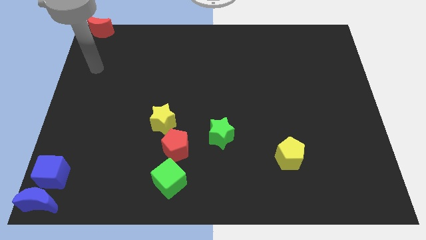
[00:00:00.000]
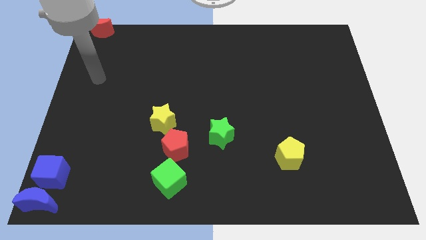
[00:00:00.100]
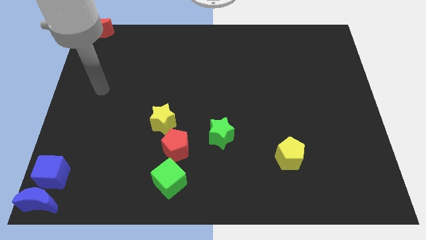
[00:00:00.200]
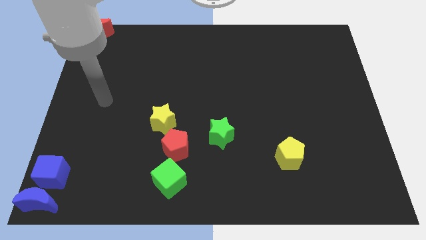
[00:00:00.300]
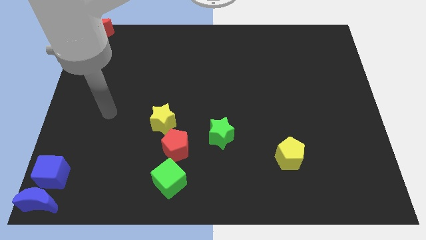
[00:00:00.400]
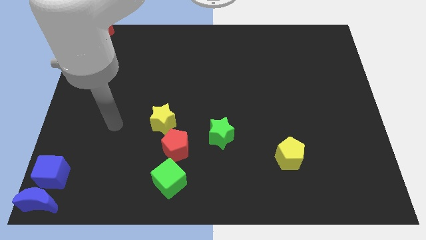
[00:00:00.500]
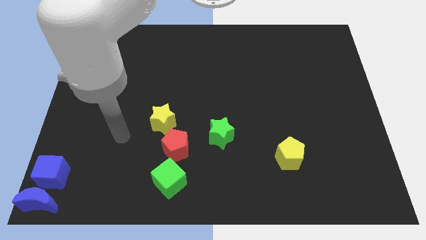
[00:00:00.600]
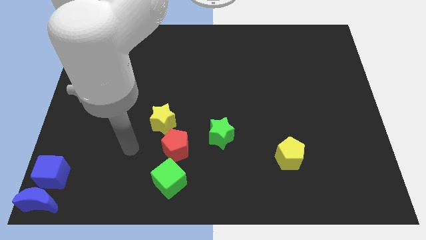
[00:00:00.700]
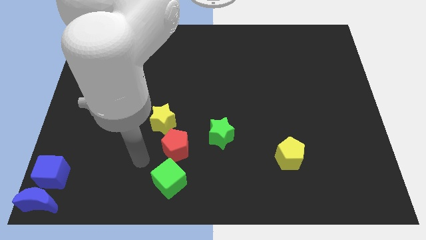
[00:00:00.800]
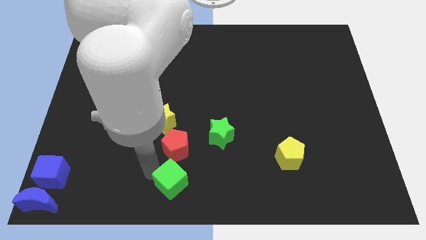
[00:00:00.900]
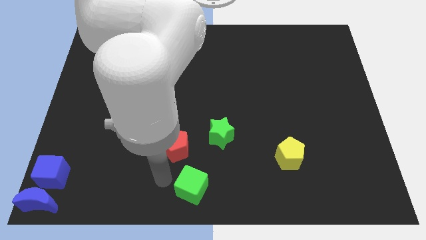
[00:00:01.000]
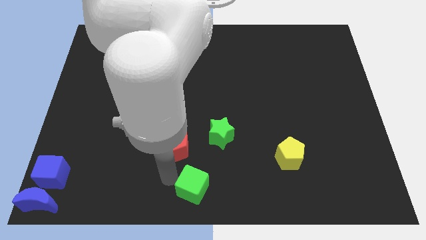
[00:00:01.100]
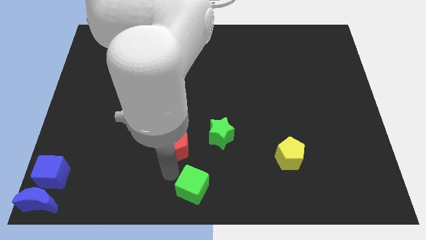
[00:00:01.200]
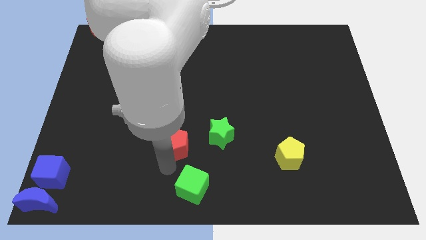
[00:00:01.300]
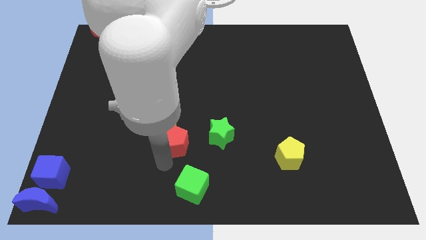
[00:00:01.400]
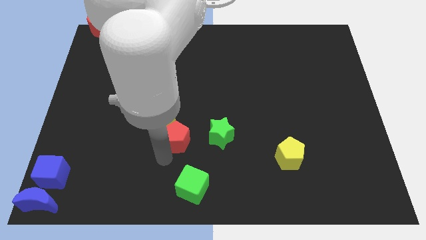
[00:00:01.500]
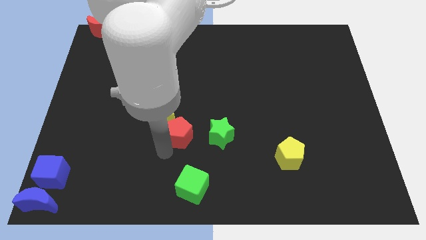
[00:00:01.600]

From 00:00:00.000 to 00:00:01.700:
move the green cube diagonally bottom right to the red pentagon

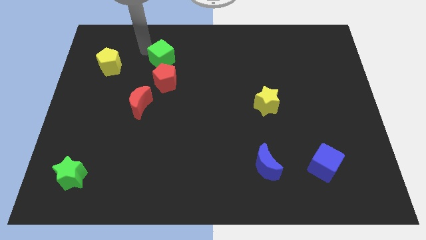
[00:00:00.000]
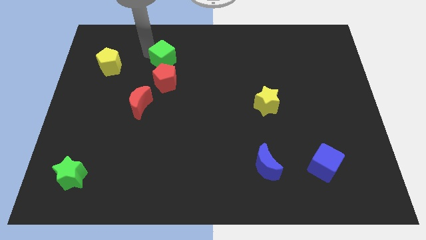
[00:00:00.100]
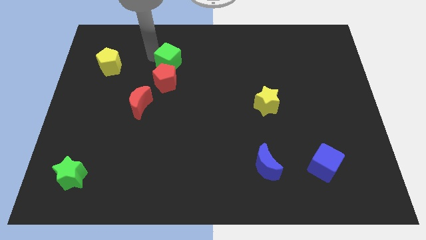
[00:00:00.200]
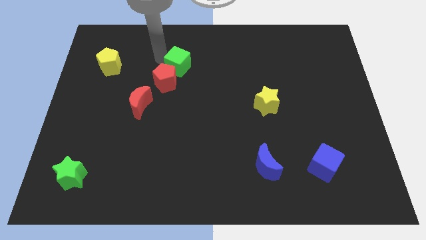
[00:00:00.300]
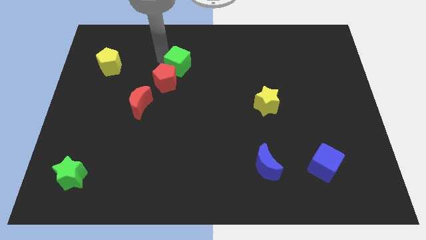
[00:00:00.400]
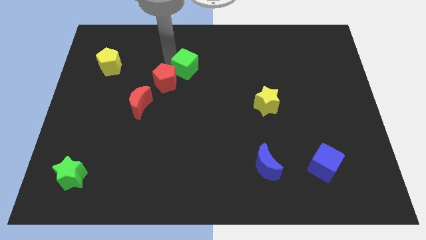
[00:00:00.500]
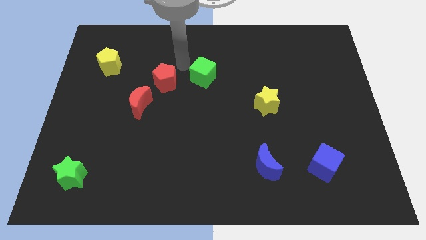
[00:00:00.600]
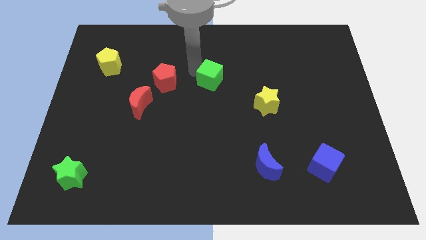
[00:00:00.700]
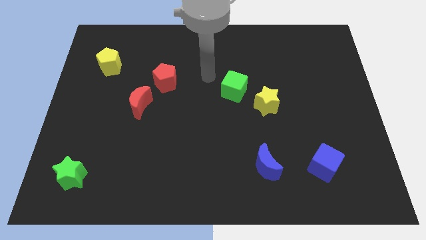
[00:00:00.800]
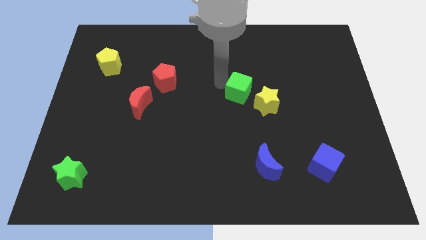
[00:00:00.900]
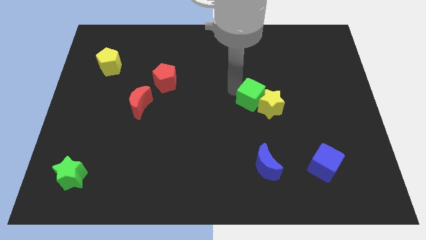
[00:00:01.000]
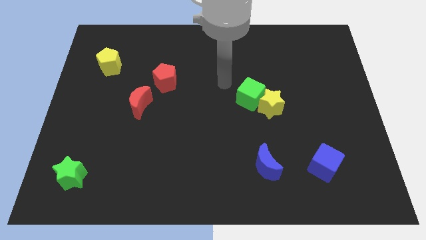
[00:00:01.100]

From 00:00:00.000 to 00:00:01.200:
push the green cube into the left of the yellow star

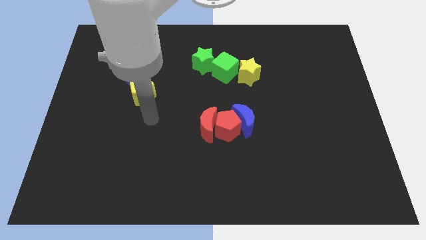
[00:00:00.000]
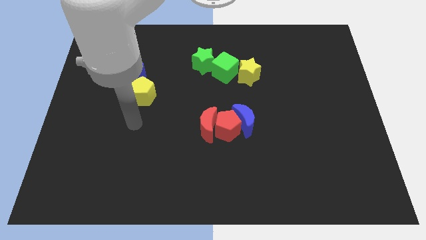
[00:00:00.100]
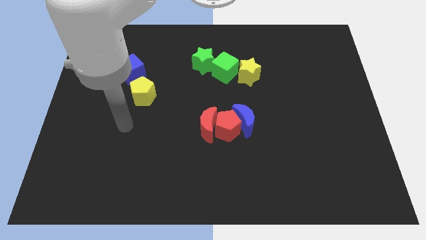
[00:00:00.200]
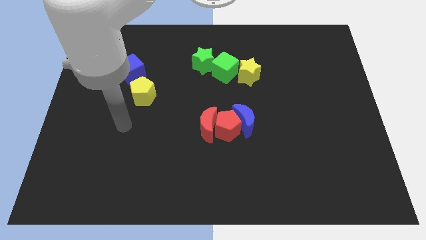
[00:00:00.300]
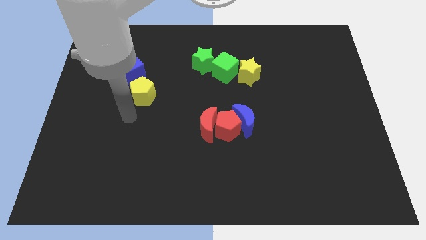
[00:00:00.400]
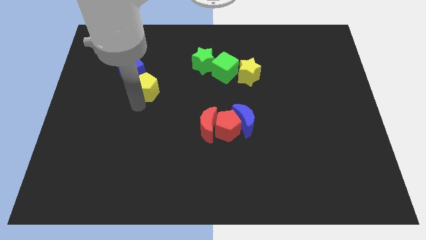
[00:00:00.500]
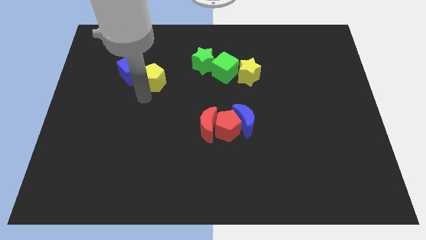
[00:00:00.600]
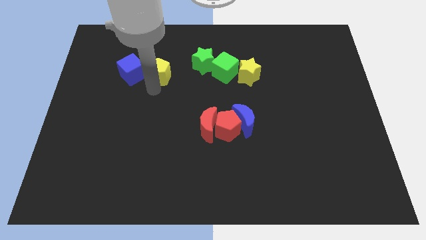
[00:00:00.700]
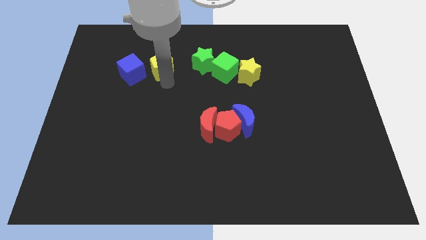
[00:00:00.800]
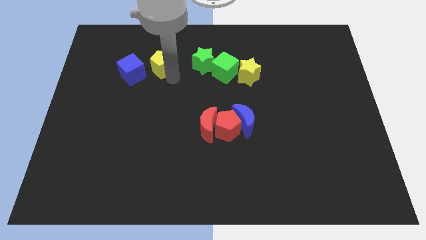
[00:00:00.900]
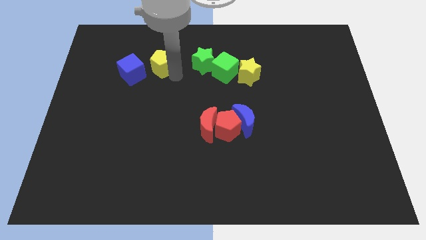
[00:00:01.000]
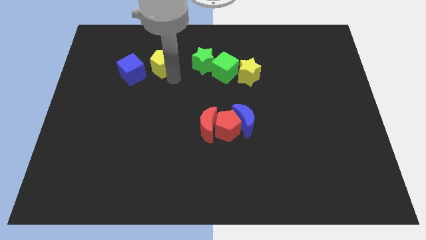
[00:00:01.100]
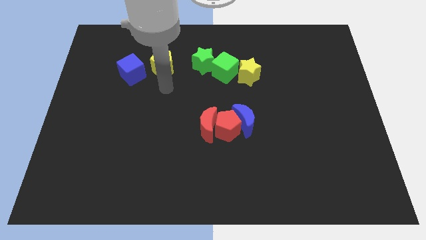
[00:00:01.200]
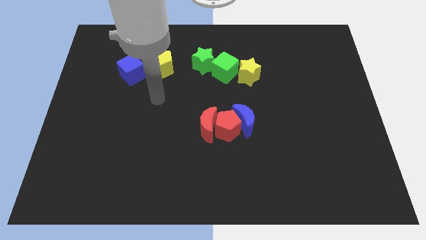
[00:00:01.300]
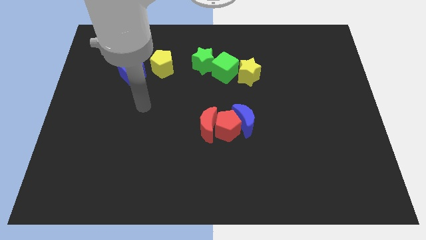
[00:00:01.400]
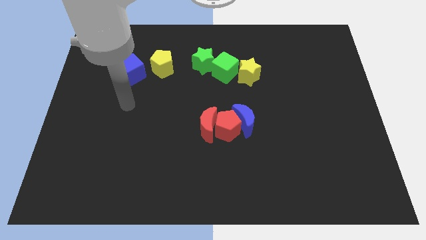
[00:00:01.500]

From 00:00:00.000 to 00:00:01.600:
place yellow pentagon to the right of blue cube

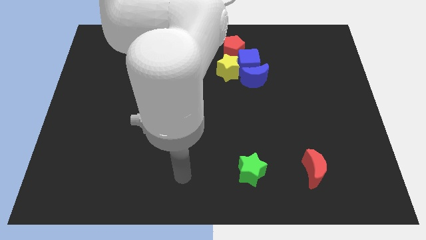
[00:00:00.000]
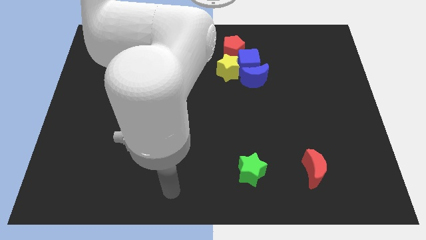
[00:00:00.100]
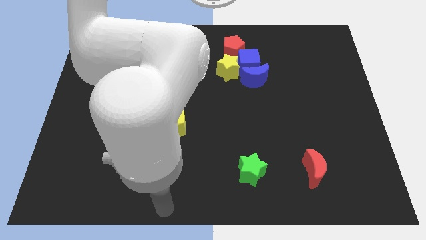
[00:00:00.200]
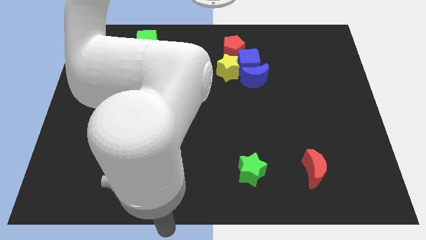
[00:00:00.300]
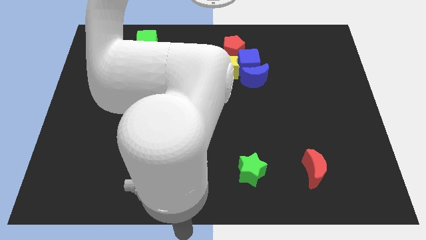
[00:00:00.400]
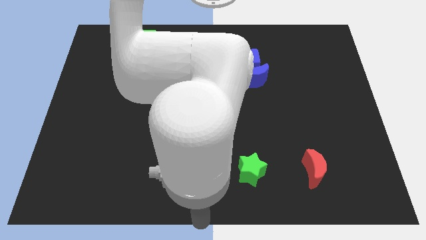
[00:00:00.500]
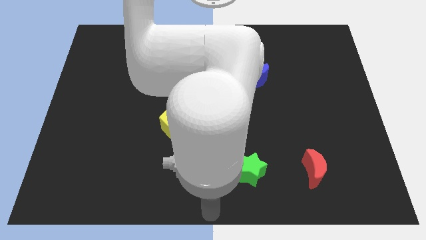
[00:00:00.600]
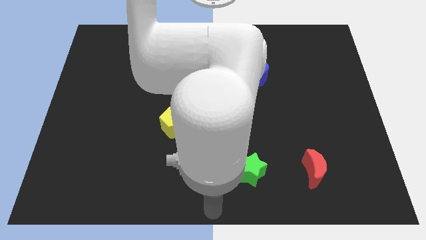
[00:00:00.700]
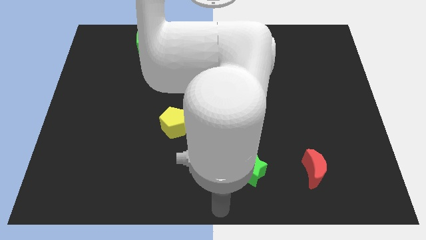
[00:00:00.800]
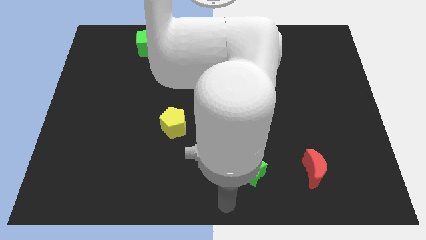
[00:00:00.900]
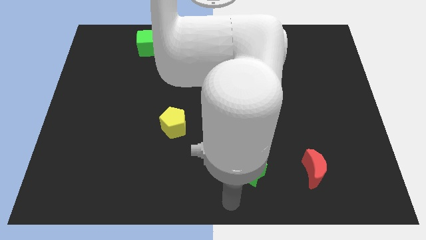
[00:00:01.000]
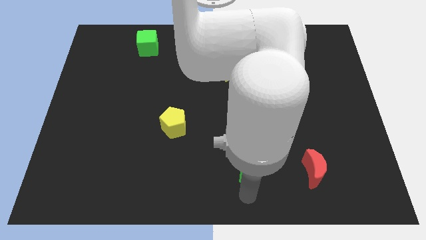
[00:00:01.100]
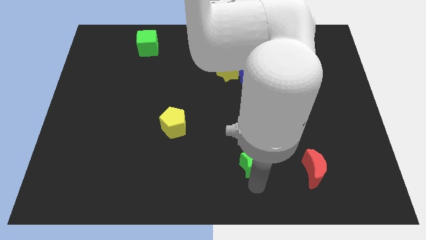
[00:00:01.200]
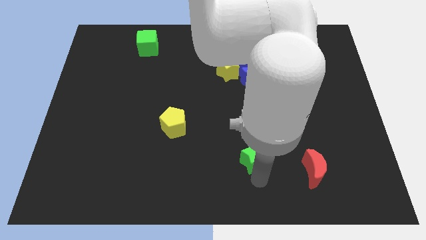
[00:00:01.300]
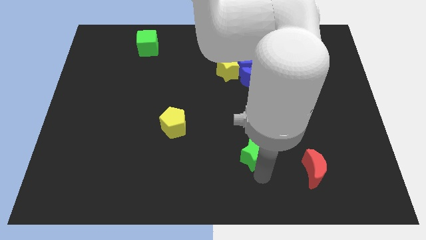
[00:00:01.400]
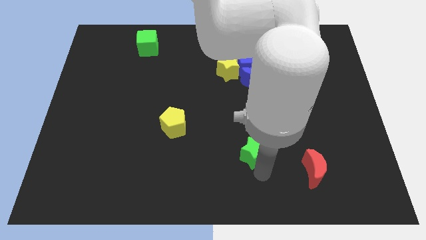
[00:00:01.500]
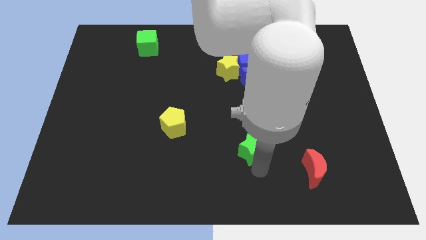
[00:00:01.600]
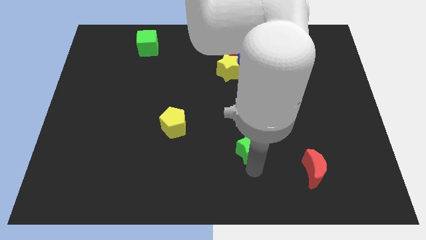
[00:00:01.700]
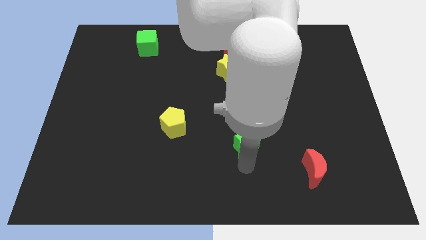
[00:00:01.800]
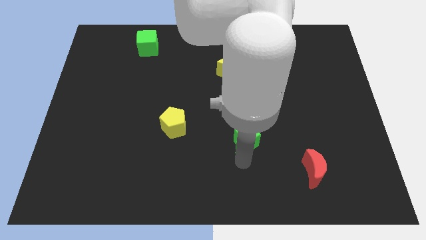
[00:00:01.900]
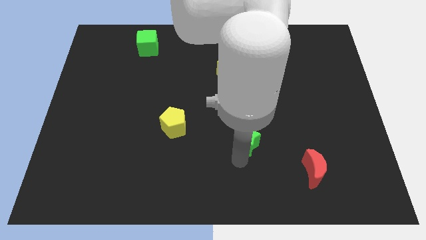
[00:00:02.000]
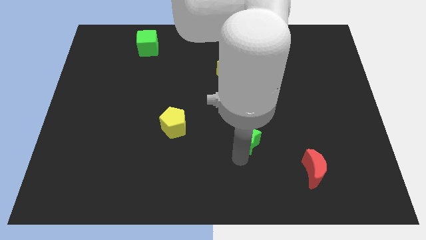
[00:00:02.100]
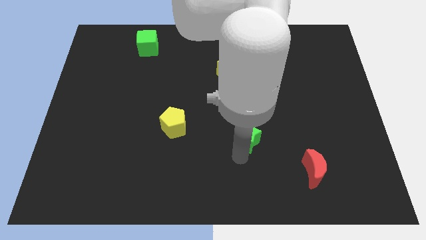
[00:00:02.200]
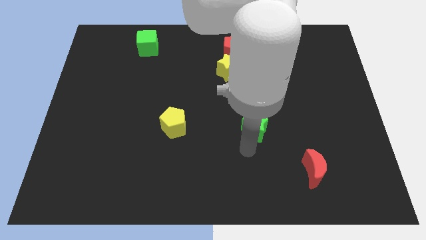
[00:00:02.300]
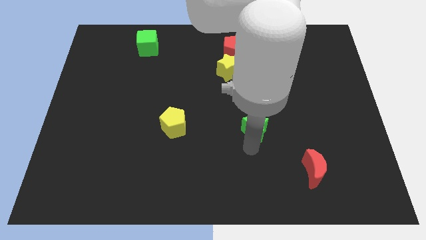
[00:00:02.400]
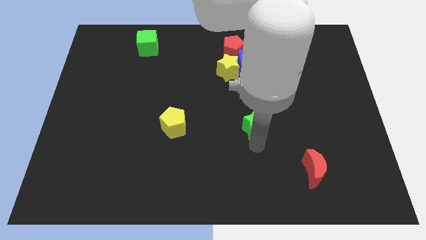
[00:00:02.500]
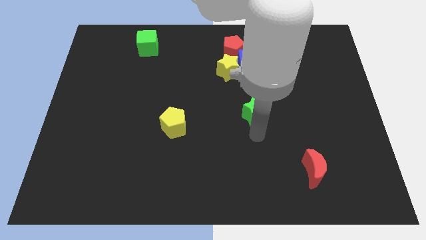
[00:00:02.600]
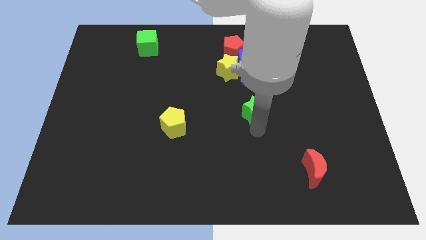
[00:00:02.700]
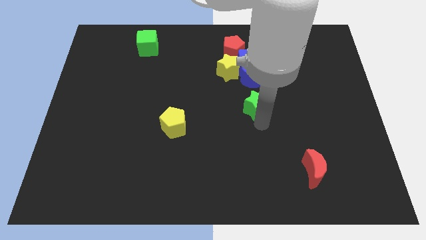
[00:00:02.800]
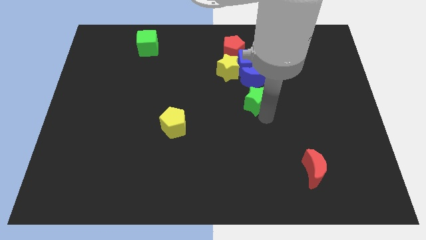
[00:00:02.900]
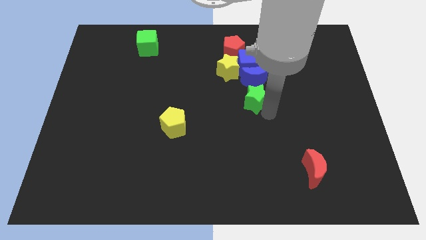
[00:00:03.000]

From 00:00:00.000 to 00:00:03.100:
move green star towards blue moon

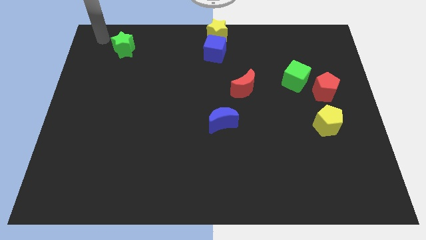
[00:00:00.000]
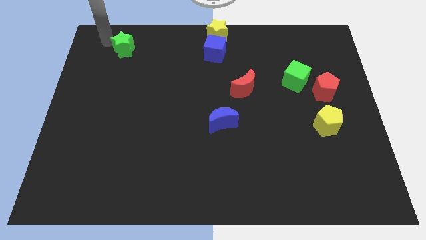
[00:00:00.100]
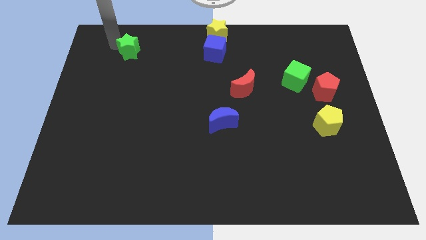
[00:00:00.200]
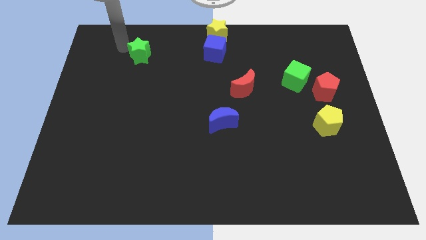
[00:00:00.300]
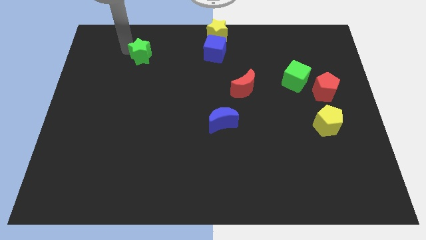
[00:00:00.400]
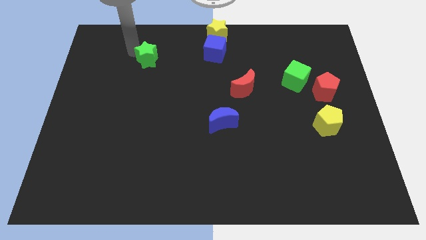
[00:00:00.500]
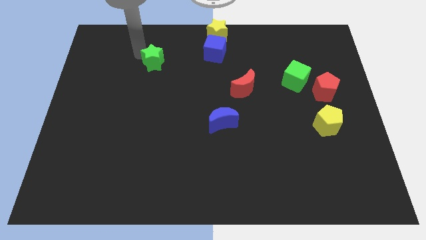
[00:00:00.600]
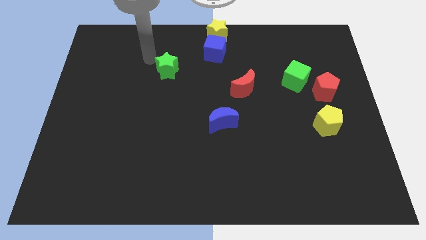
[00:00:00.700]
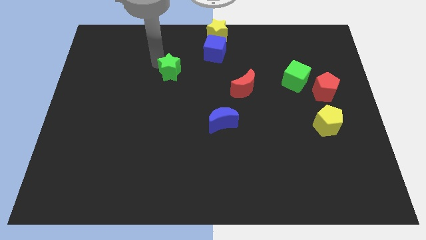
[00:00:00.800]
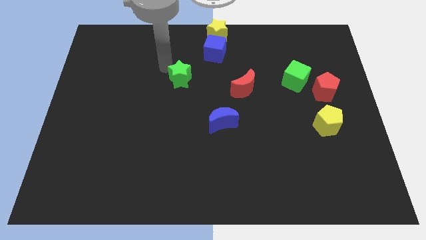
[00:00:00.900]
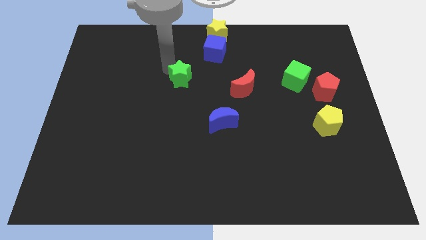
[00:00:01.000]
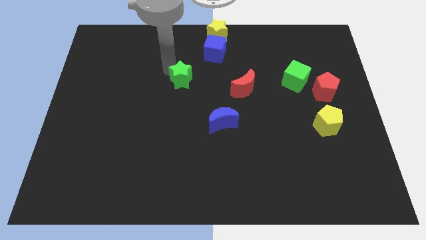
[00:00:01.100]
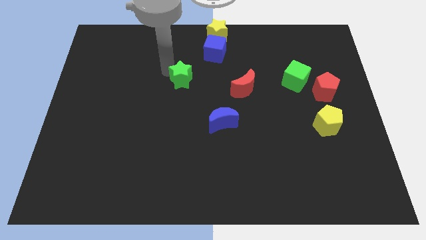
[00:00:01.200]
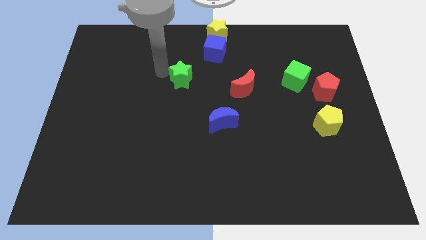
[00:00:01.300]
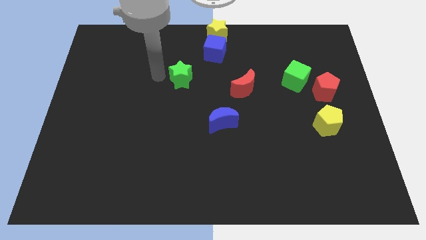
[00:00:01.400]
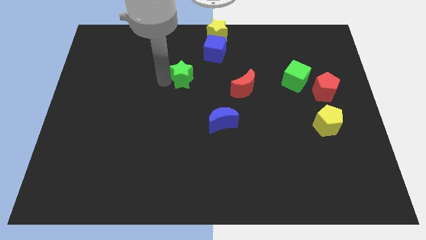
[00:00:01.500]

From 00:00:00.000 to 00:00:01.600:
push the green star slightly towards the center of the board
